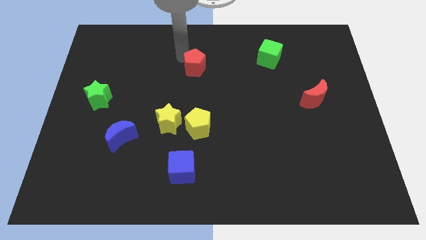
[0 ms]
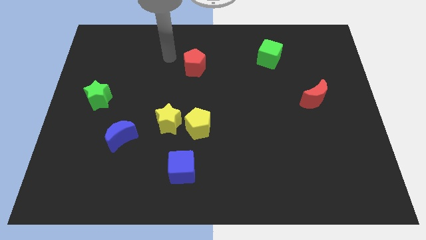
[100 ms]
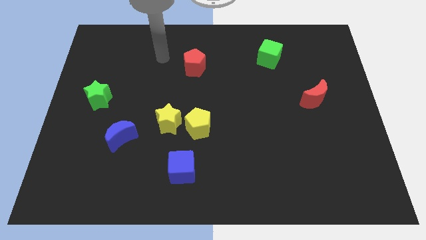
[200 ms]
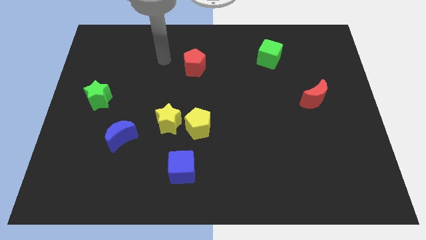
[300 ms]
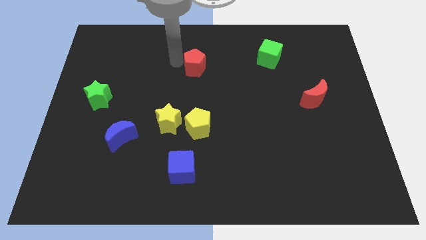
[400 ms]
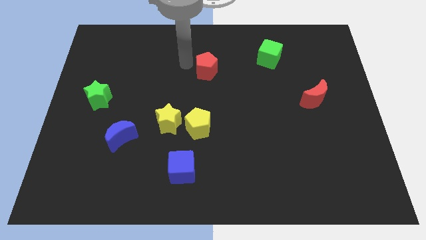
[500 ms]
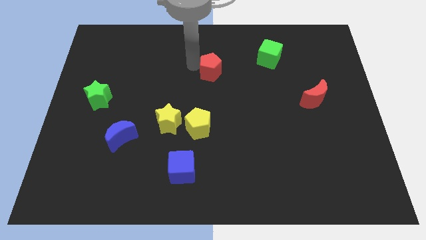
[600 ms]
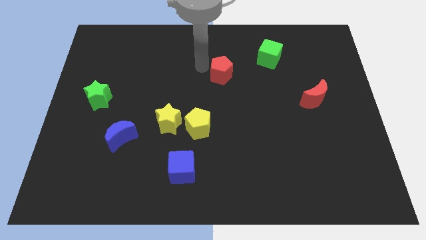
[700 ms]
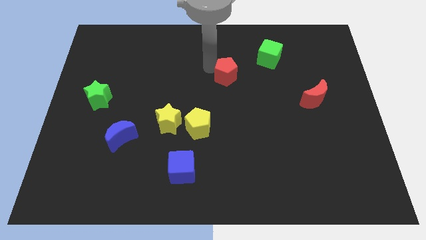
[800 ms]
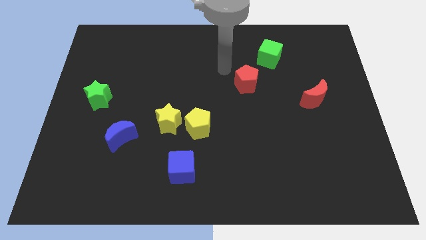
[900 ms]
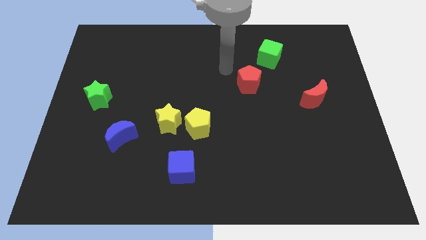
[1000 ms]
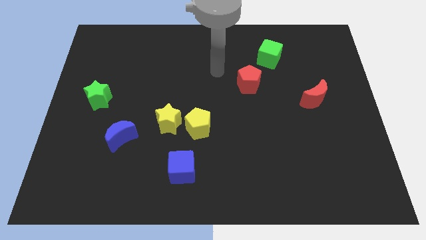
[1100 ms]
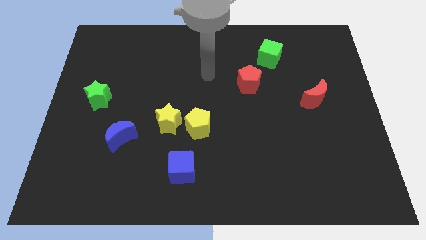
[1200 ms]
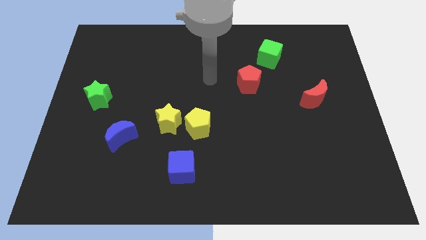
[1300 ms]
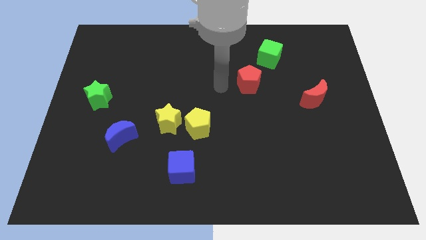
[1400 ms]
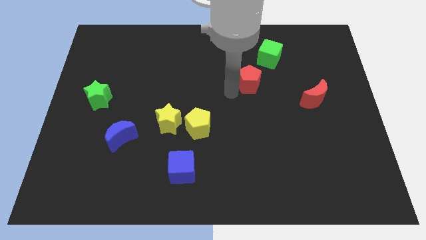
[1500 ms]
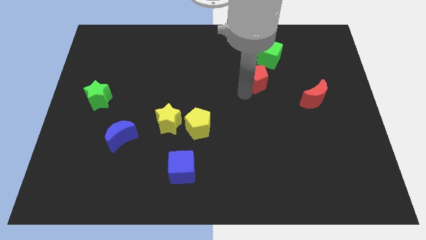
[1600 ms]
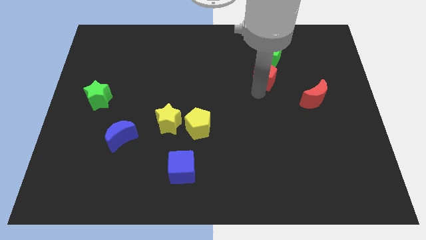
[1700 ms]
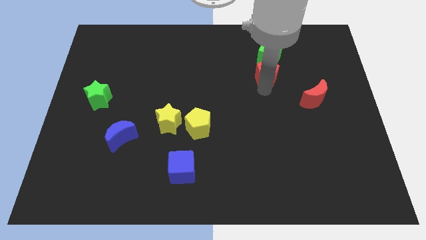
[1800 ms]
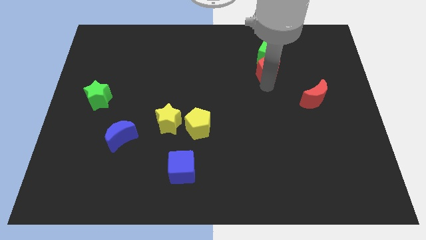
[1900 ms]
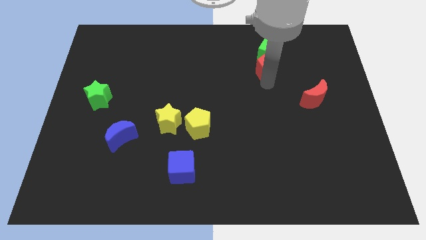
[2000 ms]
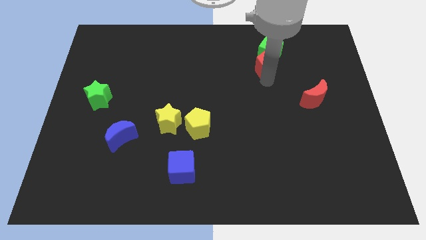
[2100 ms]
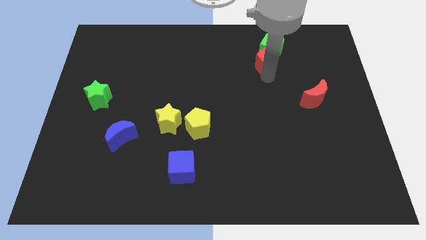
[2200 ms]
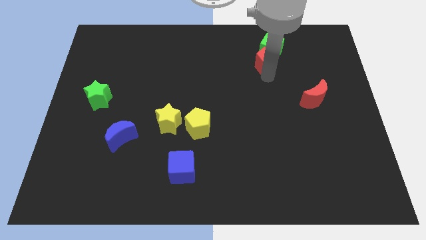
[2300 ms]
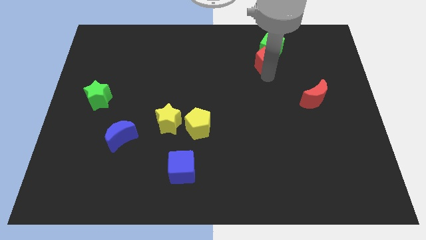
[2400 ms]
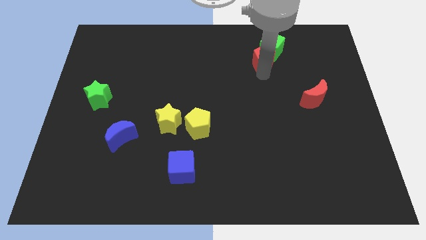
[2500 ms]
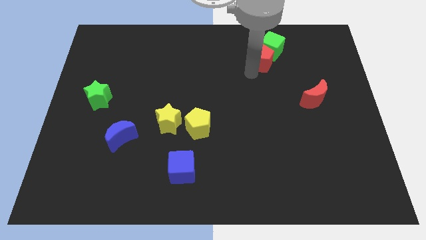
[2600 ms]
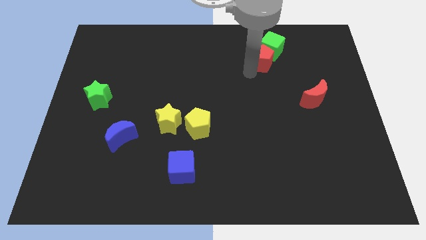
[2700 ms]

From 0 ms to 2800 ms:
push red pentagon in to green cube

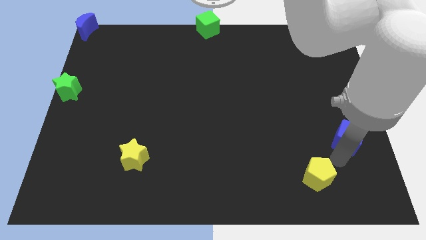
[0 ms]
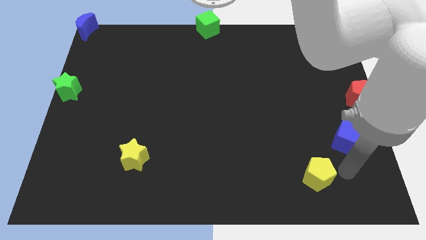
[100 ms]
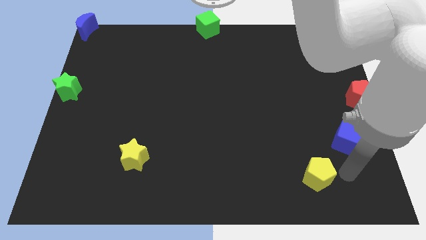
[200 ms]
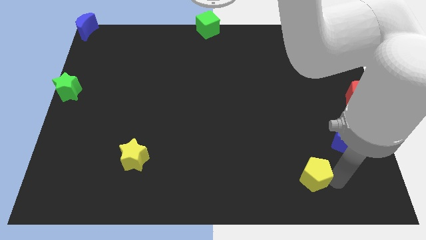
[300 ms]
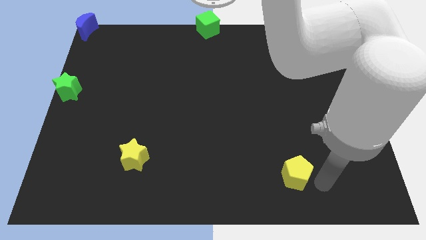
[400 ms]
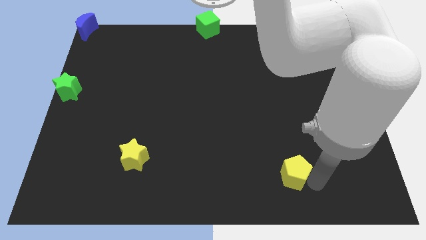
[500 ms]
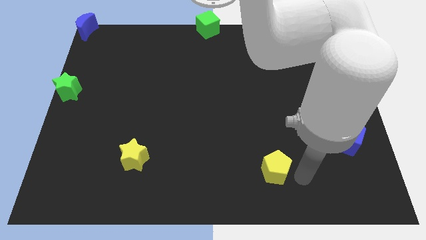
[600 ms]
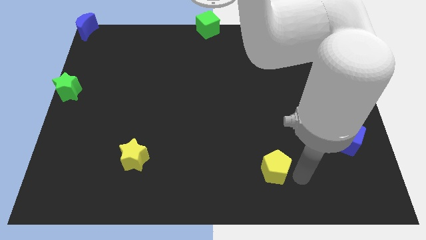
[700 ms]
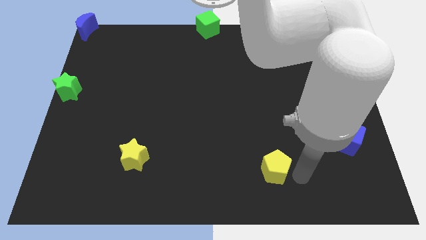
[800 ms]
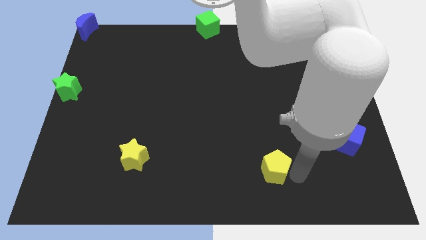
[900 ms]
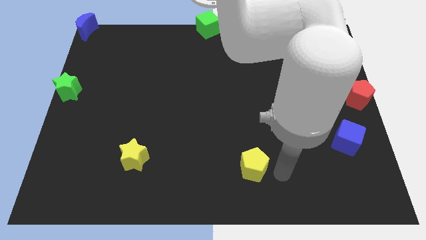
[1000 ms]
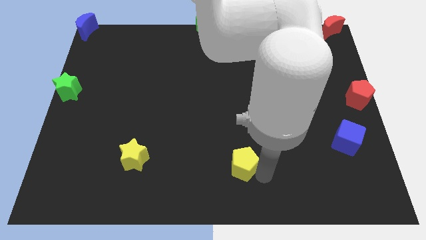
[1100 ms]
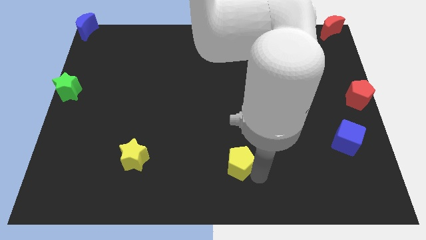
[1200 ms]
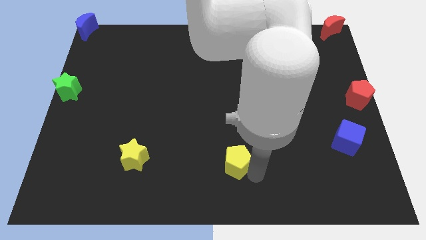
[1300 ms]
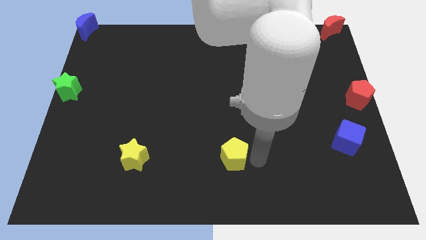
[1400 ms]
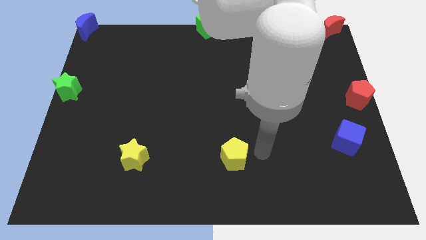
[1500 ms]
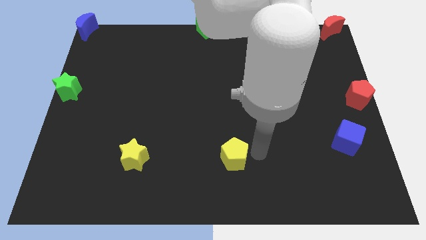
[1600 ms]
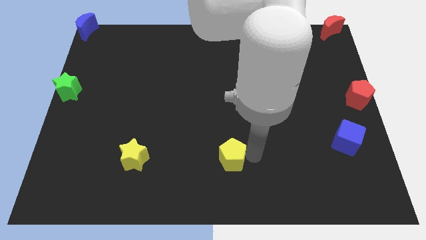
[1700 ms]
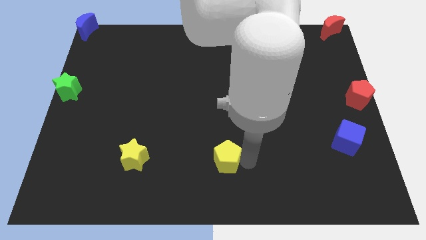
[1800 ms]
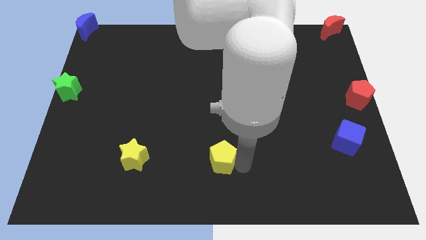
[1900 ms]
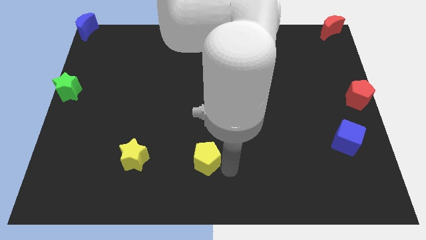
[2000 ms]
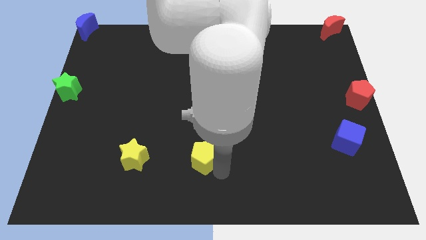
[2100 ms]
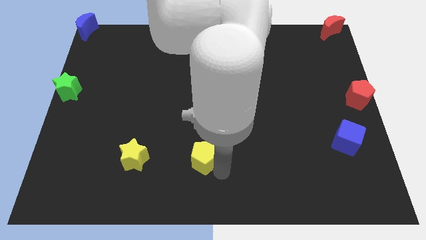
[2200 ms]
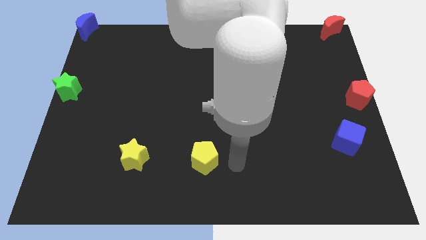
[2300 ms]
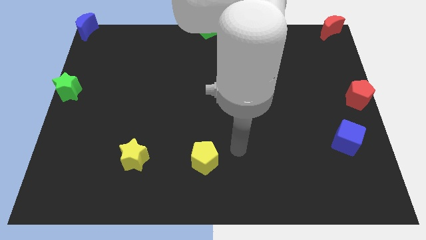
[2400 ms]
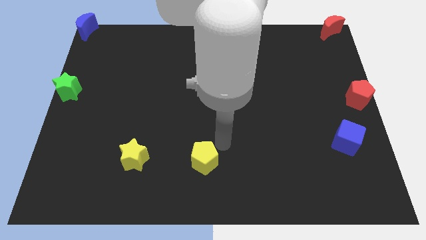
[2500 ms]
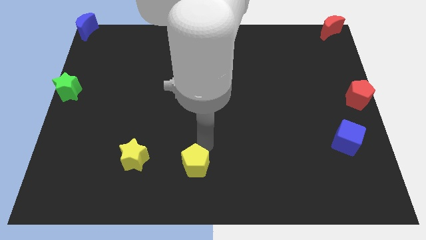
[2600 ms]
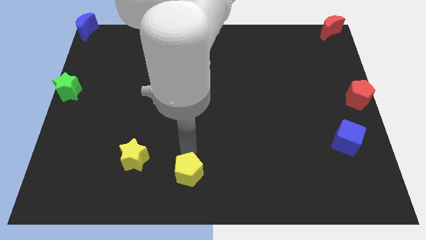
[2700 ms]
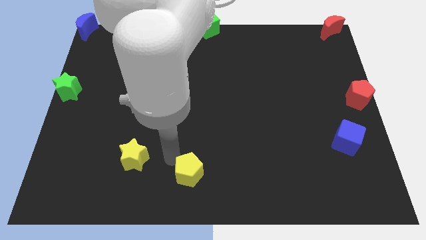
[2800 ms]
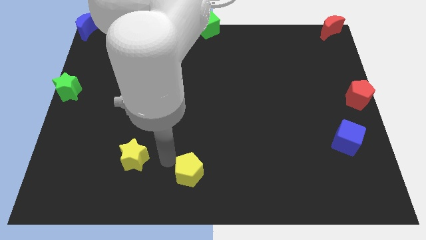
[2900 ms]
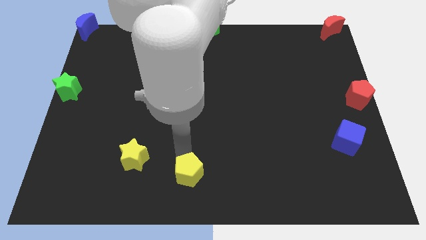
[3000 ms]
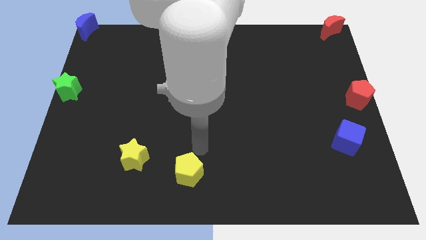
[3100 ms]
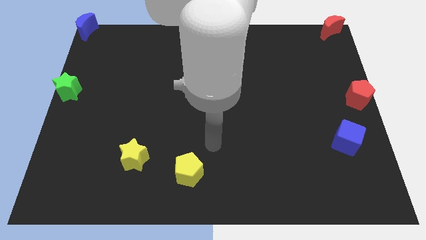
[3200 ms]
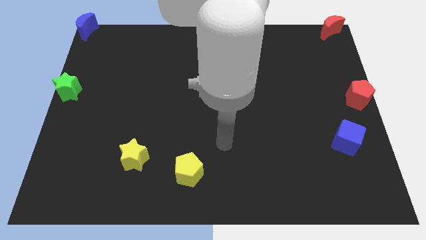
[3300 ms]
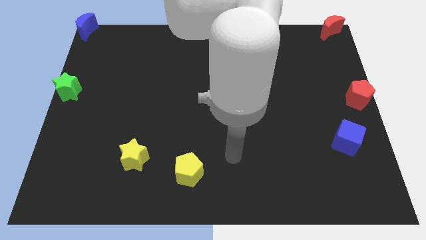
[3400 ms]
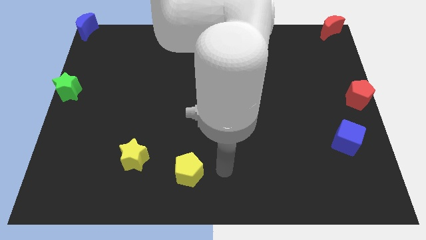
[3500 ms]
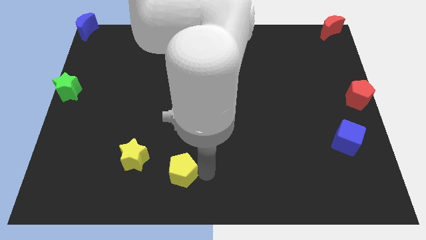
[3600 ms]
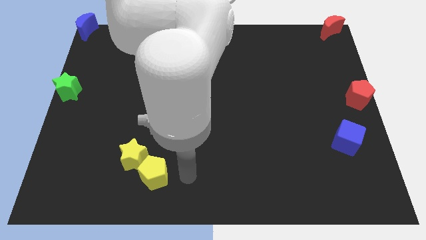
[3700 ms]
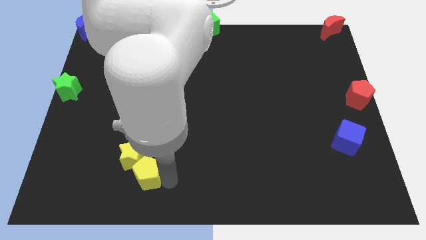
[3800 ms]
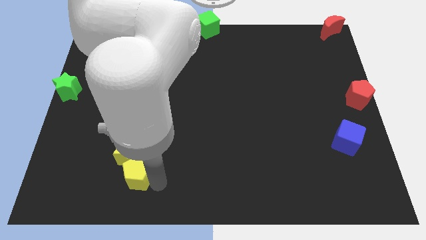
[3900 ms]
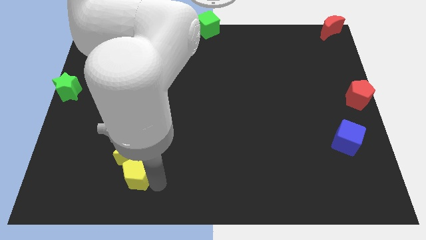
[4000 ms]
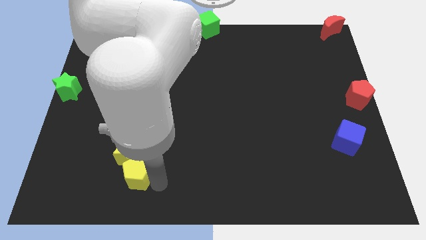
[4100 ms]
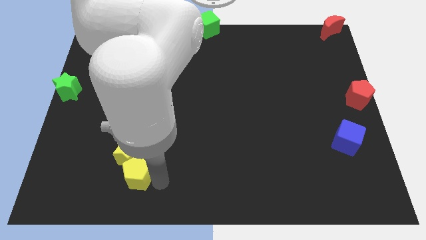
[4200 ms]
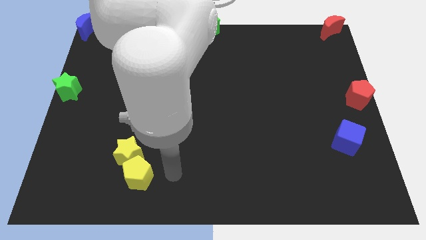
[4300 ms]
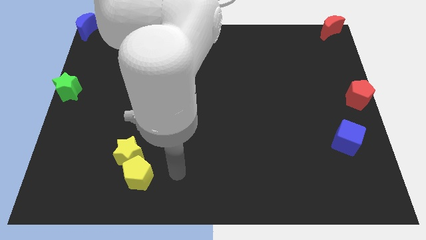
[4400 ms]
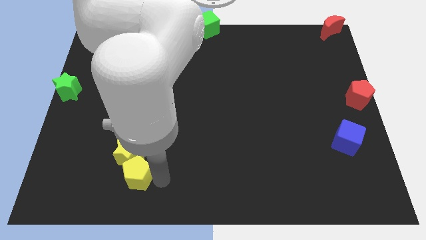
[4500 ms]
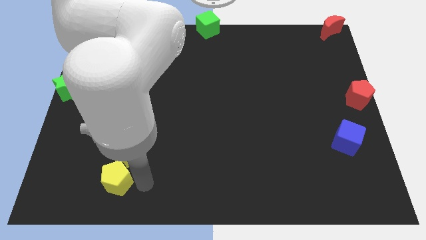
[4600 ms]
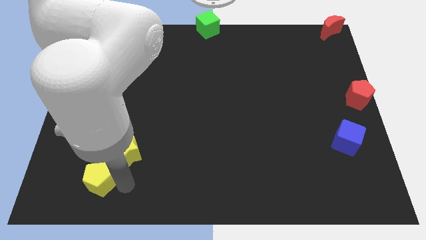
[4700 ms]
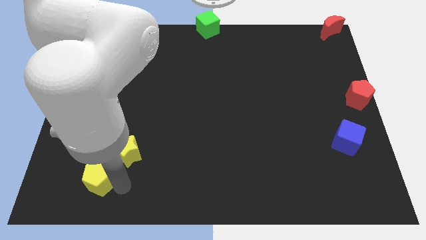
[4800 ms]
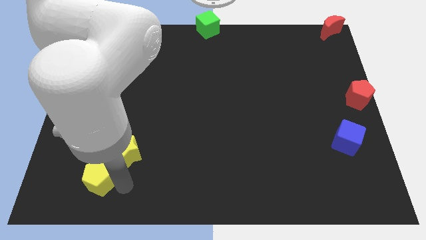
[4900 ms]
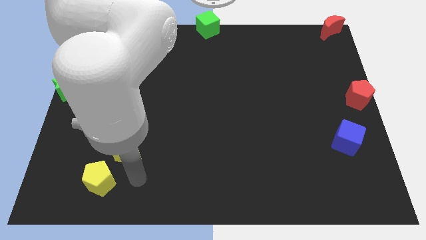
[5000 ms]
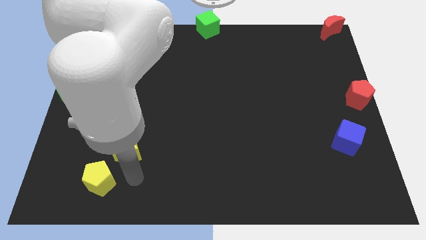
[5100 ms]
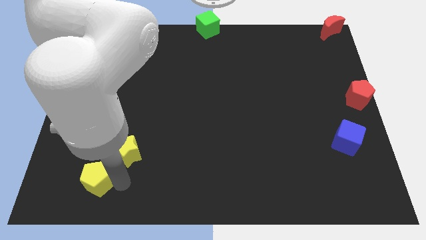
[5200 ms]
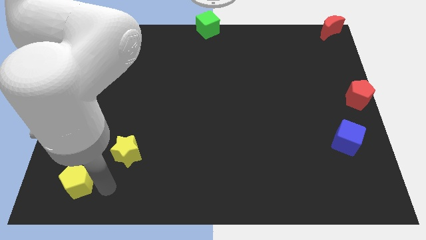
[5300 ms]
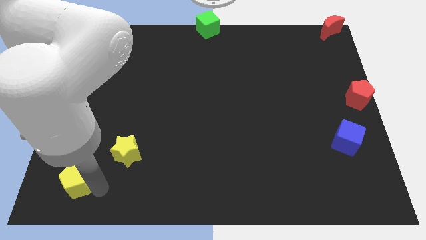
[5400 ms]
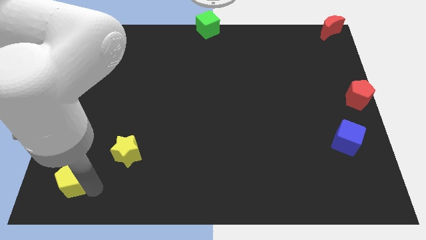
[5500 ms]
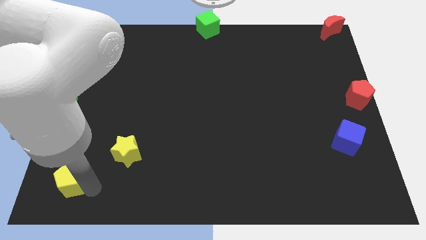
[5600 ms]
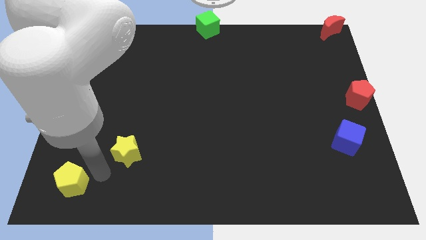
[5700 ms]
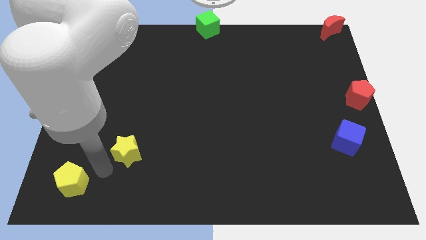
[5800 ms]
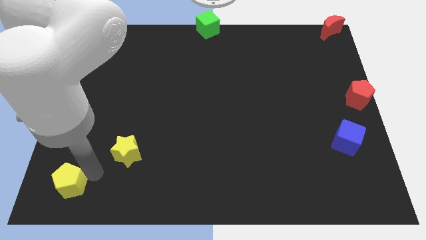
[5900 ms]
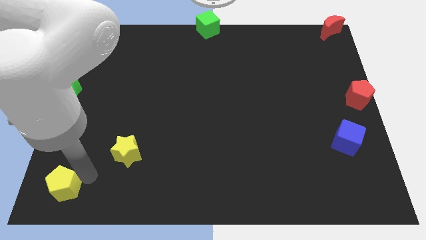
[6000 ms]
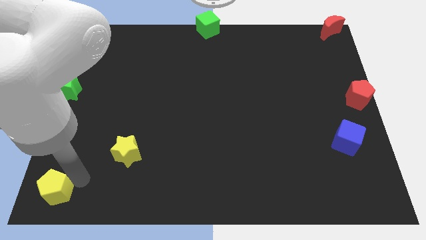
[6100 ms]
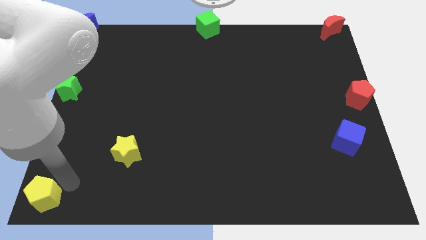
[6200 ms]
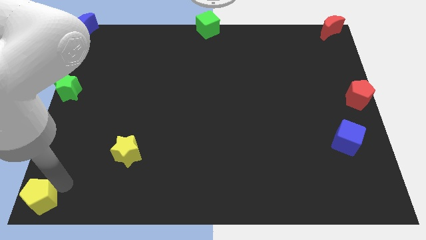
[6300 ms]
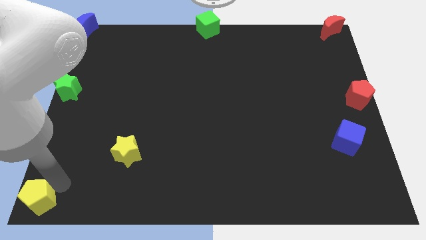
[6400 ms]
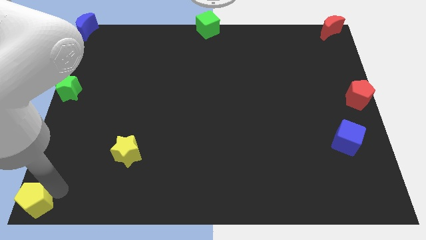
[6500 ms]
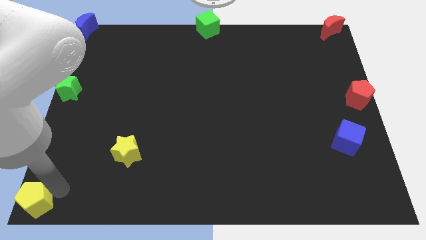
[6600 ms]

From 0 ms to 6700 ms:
move the yellow pentagon to the left bottom corner of the board
